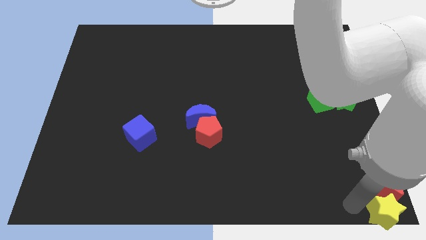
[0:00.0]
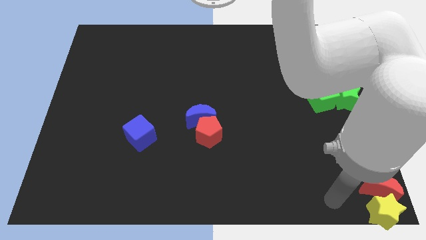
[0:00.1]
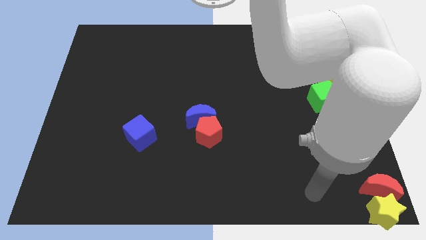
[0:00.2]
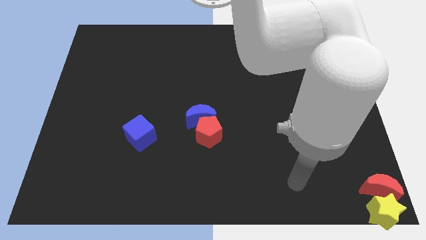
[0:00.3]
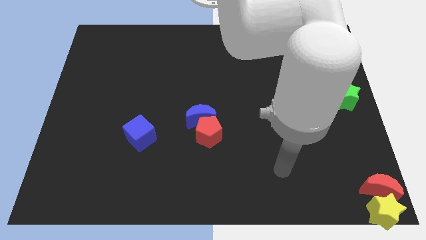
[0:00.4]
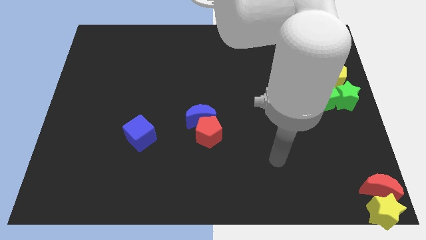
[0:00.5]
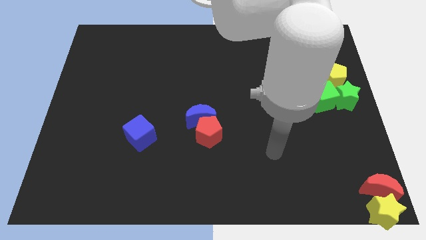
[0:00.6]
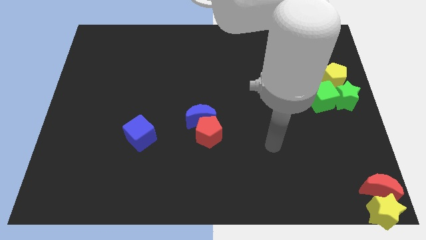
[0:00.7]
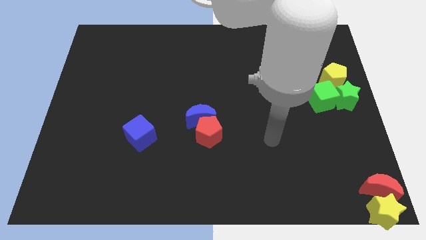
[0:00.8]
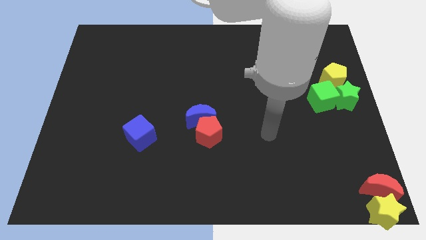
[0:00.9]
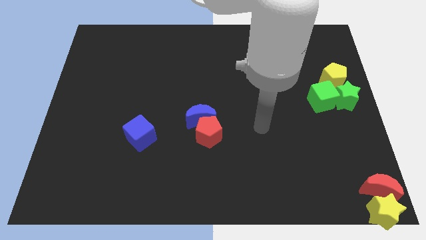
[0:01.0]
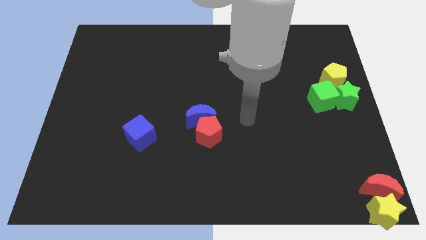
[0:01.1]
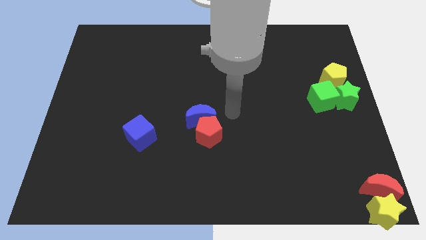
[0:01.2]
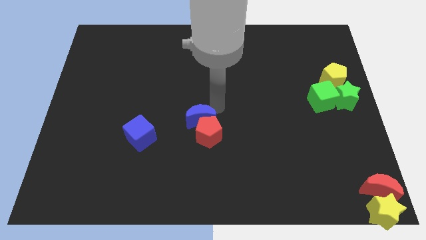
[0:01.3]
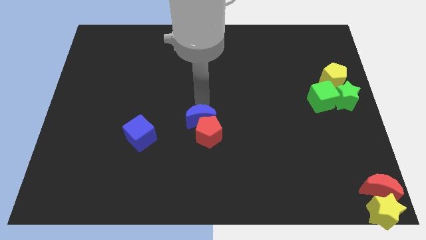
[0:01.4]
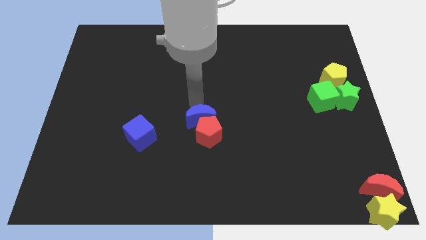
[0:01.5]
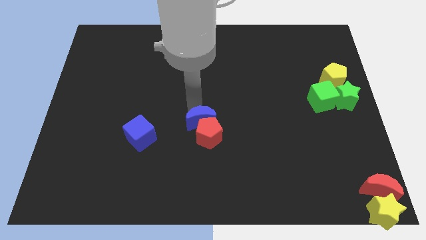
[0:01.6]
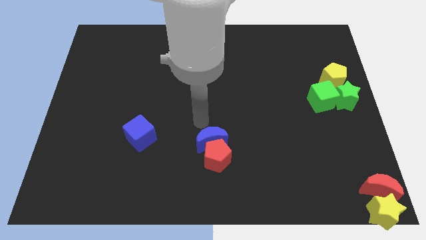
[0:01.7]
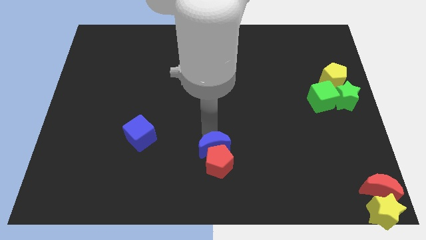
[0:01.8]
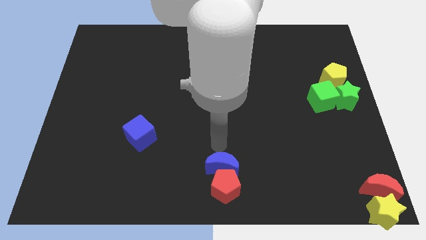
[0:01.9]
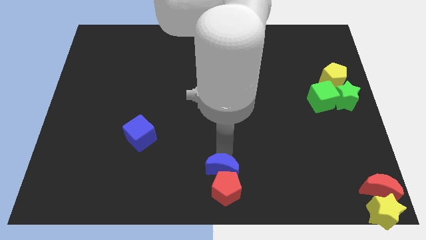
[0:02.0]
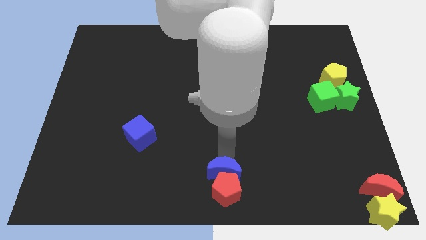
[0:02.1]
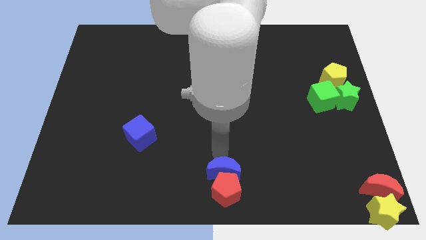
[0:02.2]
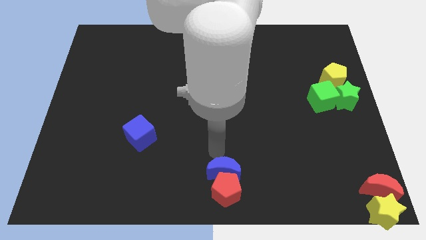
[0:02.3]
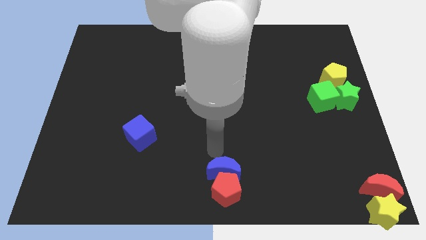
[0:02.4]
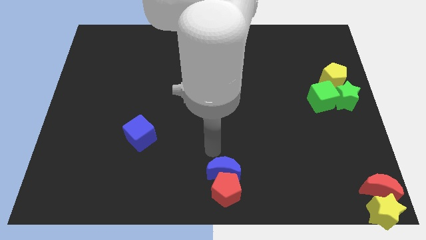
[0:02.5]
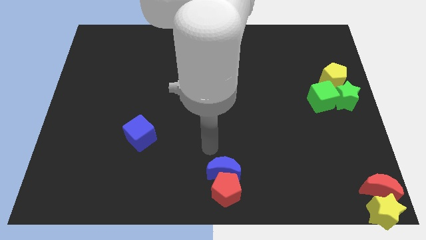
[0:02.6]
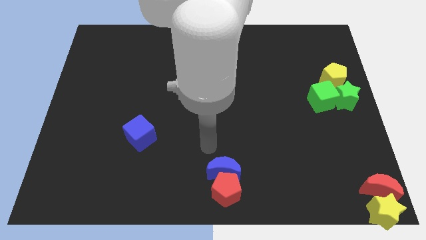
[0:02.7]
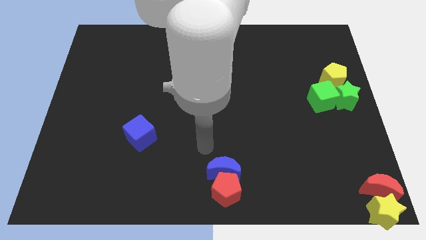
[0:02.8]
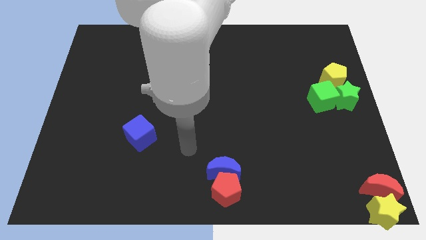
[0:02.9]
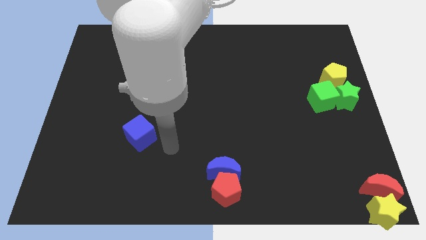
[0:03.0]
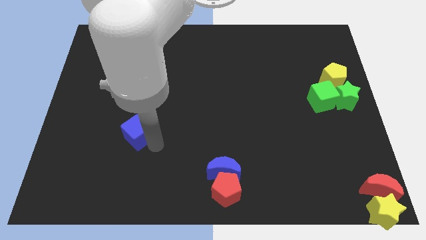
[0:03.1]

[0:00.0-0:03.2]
place blue moon and the red pentagon at the bottom center

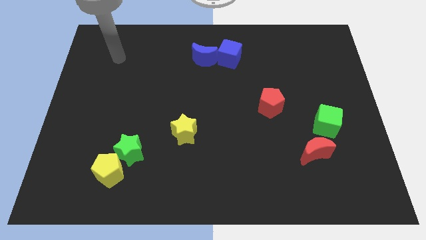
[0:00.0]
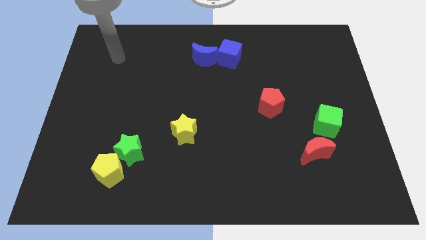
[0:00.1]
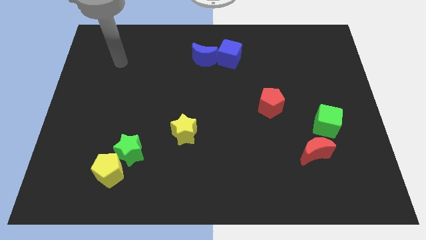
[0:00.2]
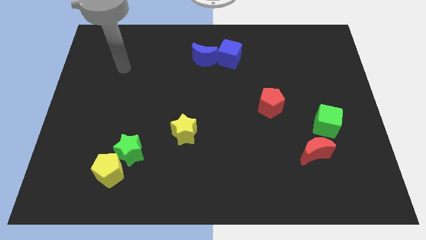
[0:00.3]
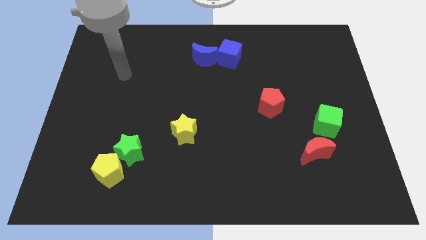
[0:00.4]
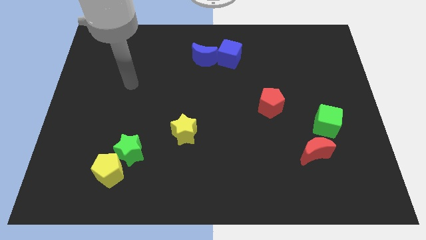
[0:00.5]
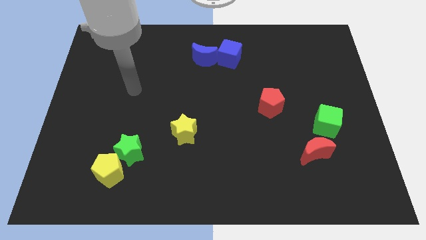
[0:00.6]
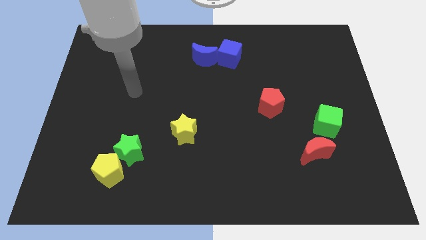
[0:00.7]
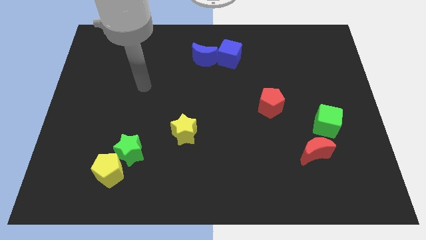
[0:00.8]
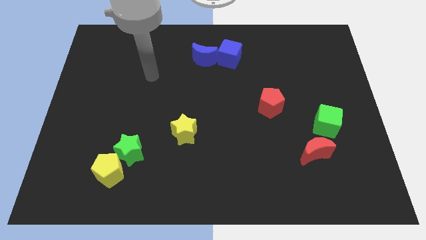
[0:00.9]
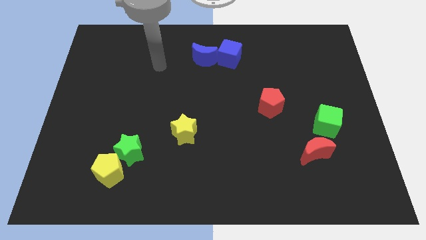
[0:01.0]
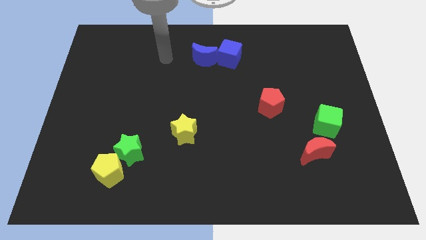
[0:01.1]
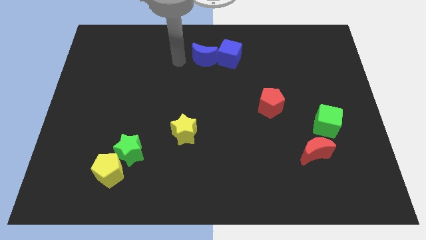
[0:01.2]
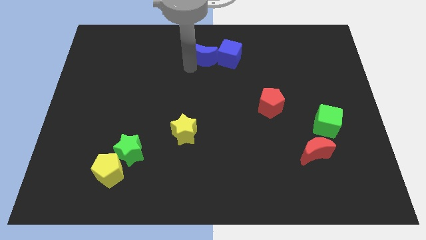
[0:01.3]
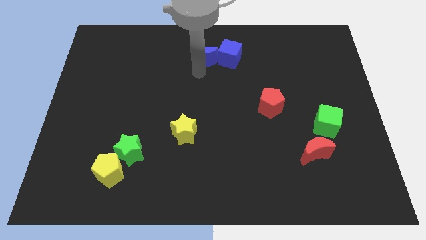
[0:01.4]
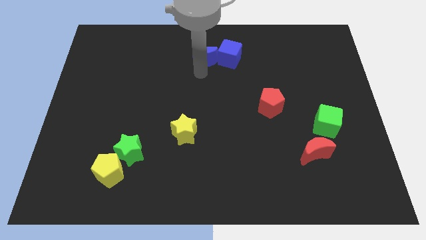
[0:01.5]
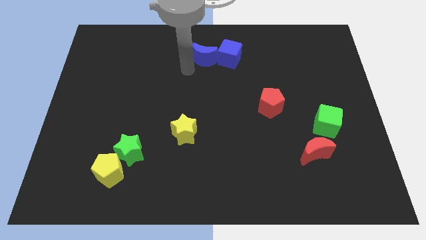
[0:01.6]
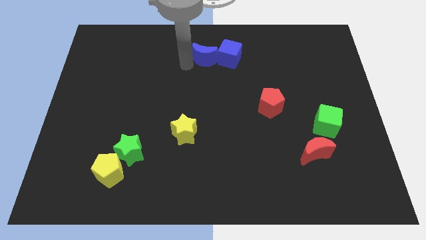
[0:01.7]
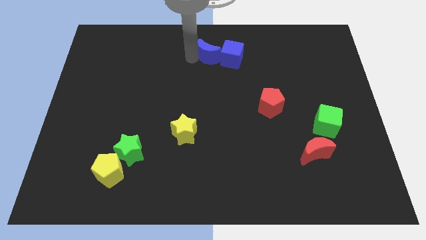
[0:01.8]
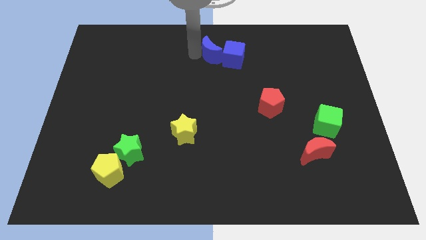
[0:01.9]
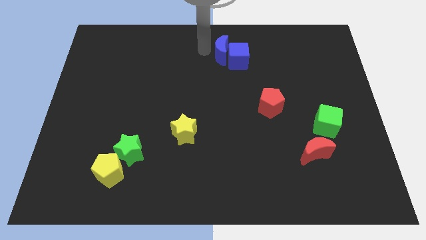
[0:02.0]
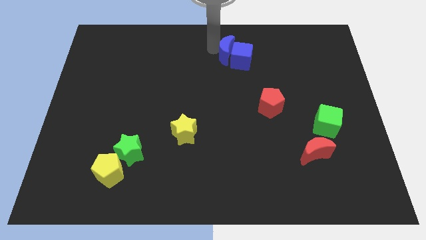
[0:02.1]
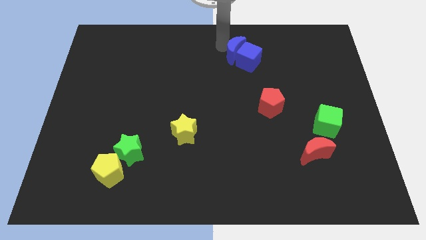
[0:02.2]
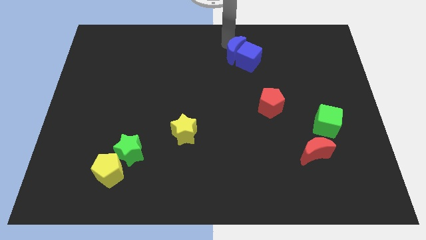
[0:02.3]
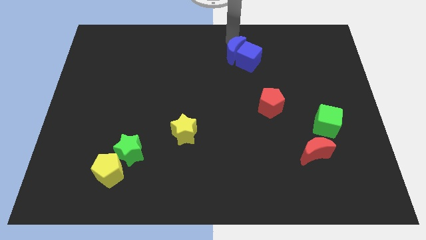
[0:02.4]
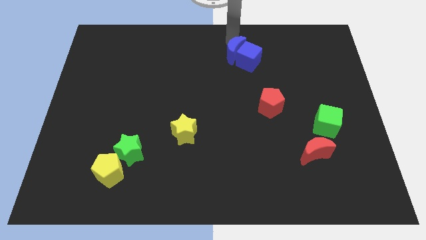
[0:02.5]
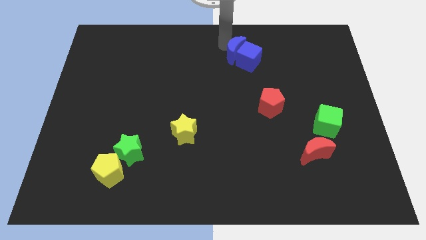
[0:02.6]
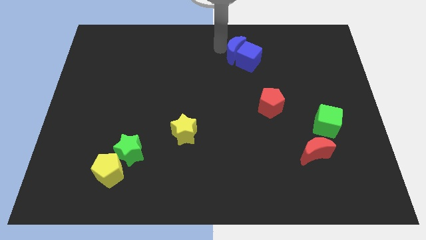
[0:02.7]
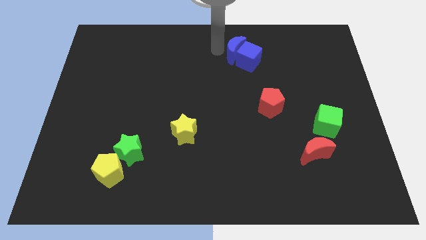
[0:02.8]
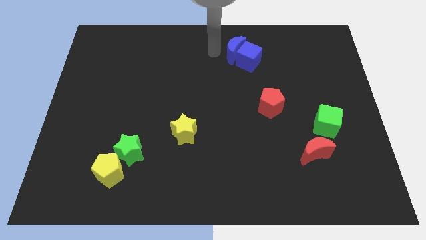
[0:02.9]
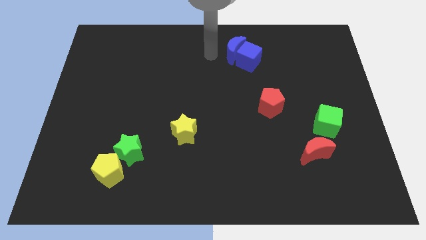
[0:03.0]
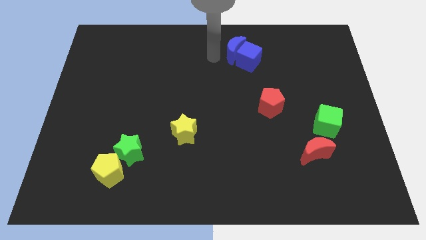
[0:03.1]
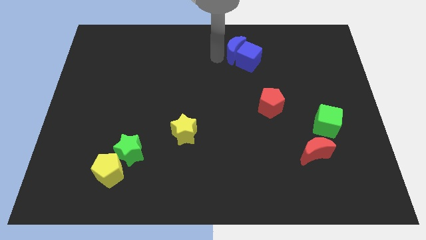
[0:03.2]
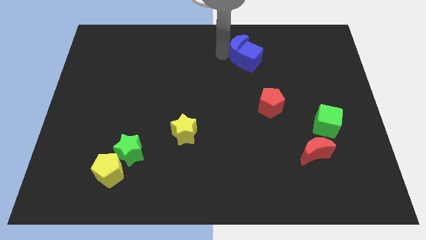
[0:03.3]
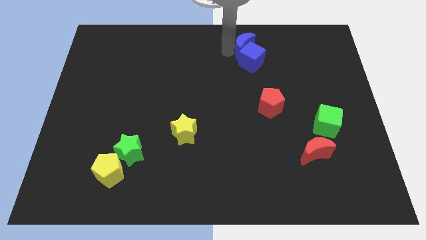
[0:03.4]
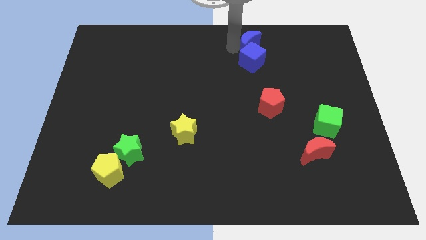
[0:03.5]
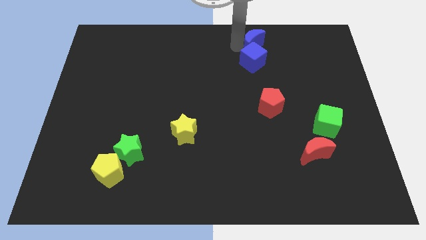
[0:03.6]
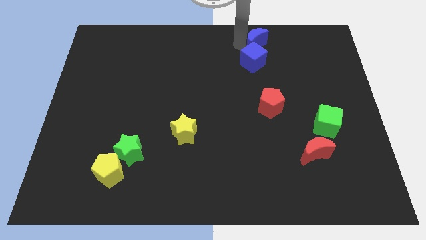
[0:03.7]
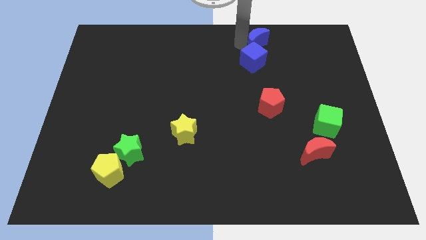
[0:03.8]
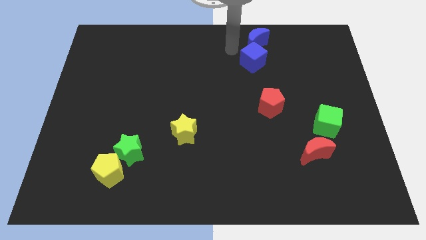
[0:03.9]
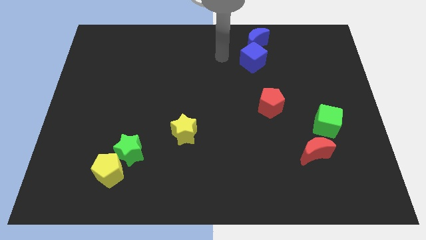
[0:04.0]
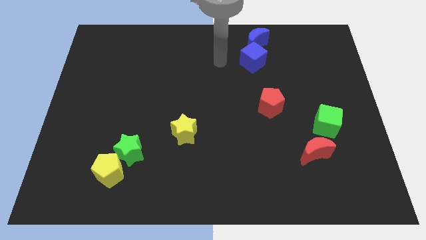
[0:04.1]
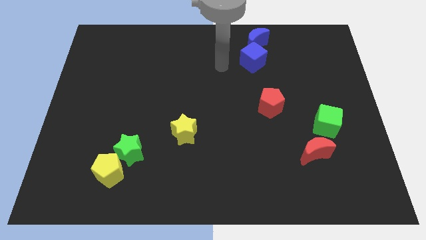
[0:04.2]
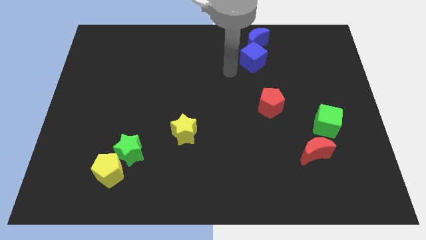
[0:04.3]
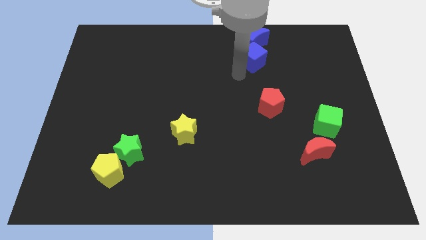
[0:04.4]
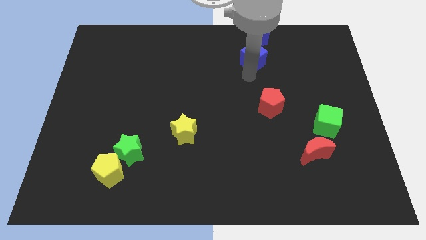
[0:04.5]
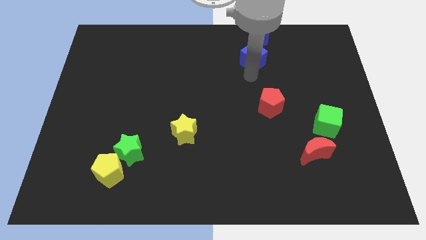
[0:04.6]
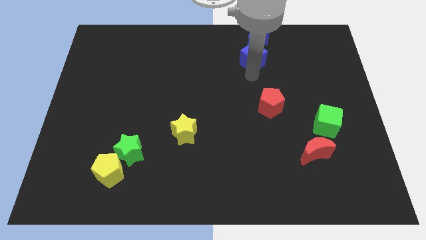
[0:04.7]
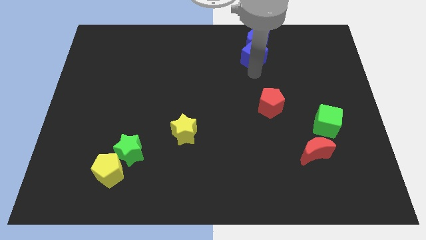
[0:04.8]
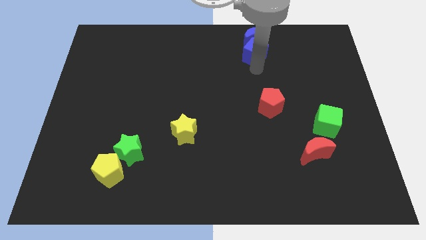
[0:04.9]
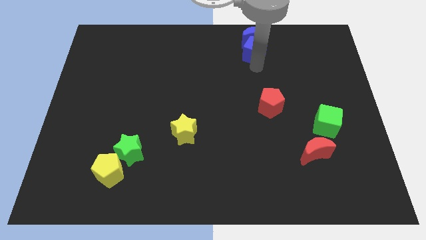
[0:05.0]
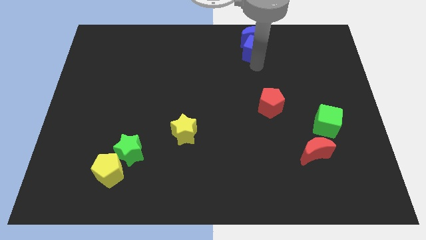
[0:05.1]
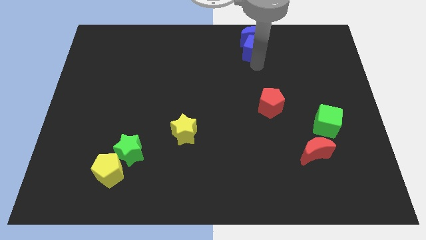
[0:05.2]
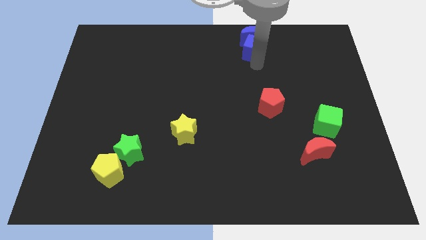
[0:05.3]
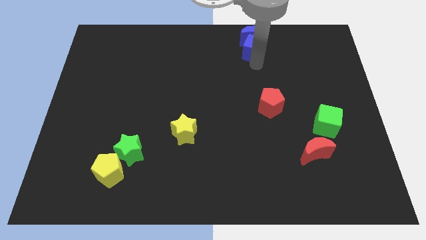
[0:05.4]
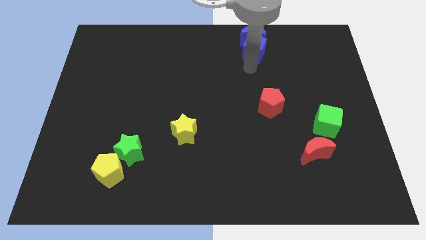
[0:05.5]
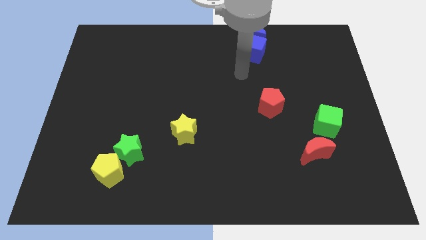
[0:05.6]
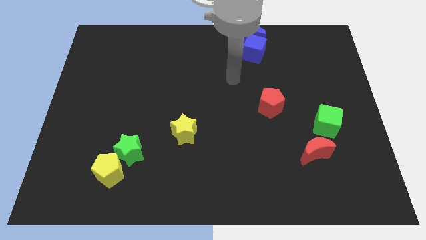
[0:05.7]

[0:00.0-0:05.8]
move the blue crescent and blue cube to top right of the board
